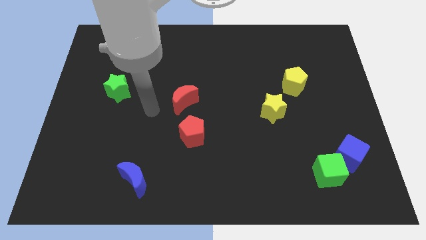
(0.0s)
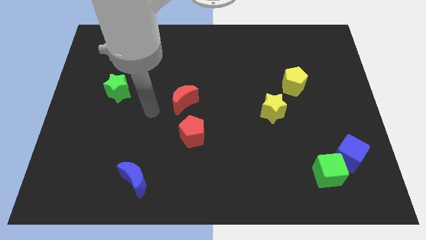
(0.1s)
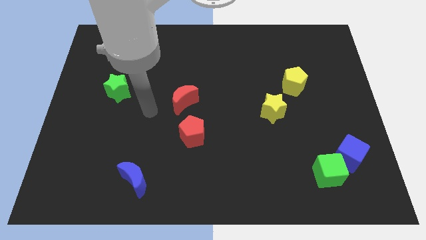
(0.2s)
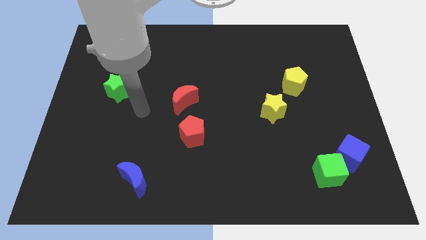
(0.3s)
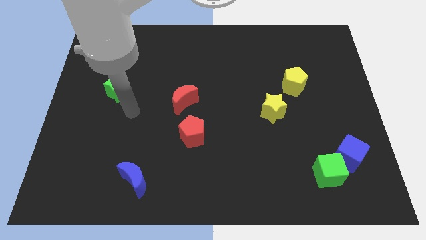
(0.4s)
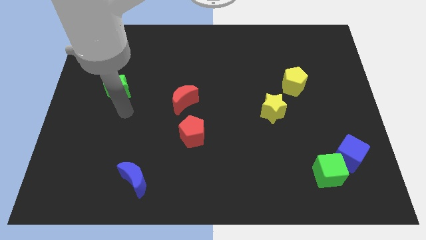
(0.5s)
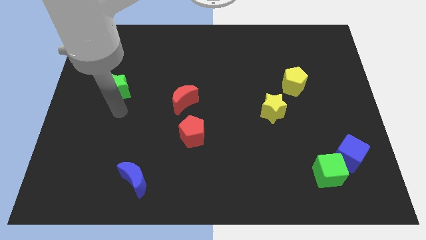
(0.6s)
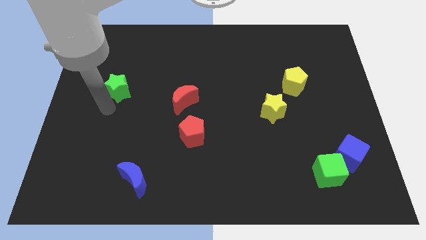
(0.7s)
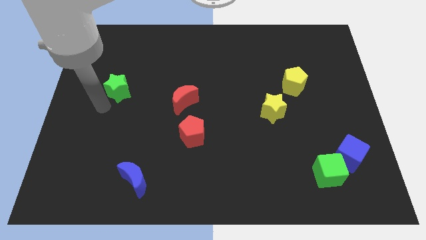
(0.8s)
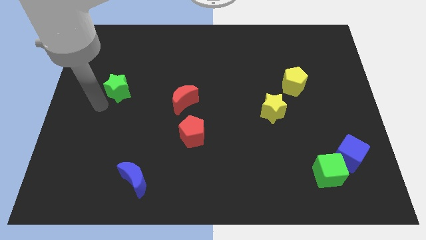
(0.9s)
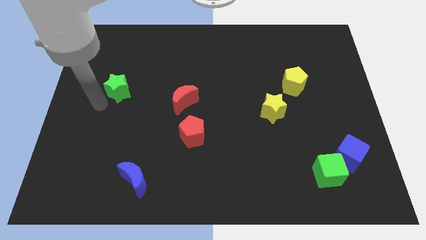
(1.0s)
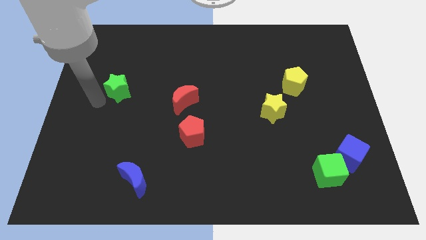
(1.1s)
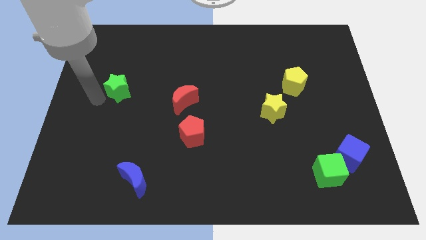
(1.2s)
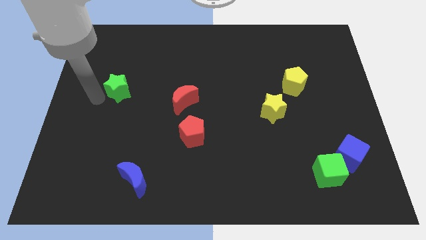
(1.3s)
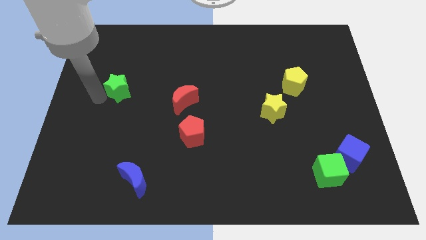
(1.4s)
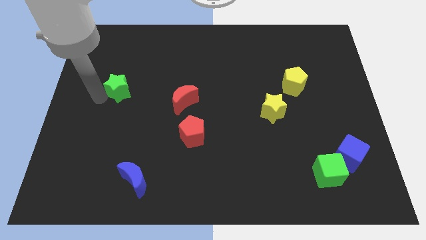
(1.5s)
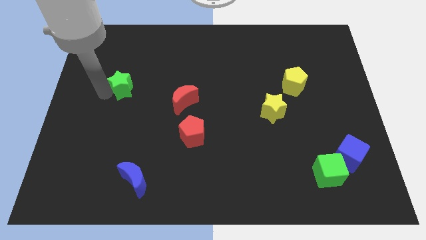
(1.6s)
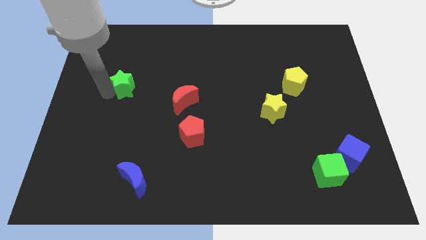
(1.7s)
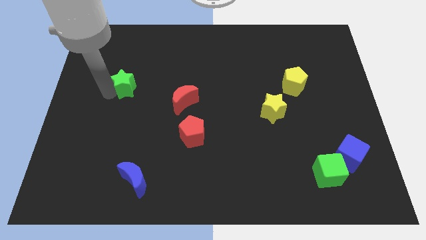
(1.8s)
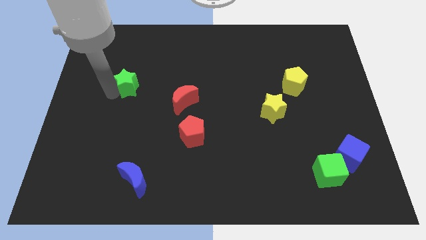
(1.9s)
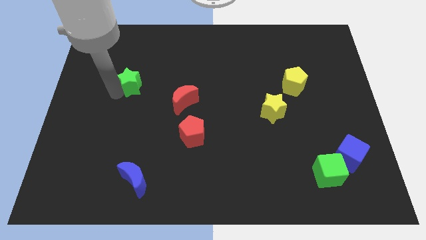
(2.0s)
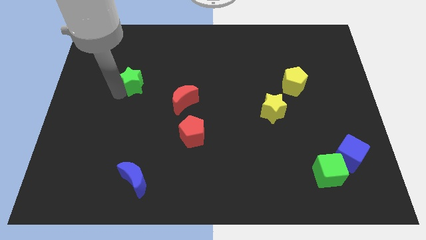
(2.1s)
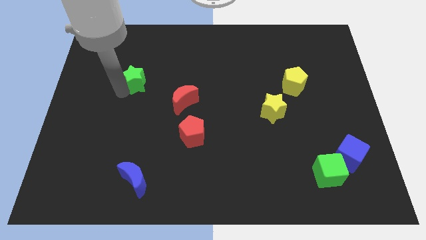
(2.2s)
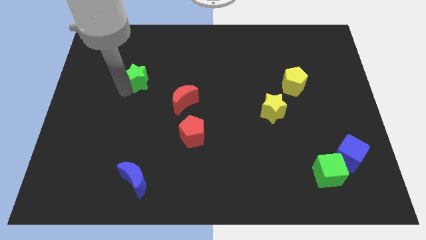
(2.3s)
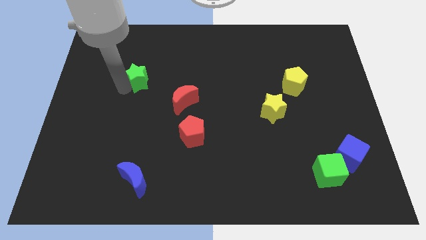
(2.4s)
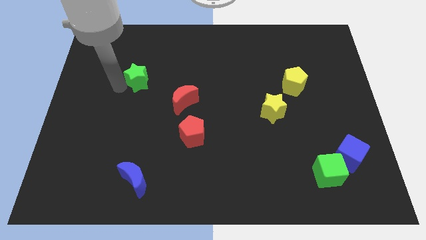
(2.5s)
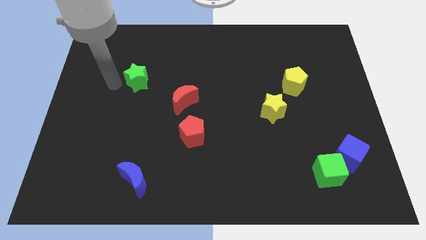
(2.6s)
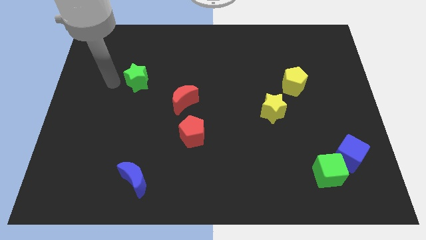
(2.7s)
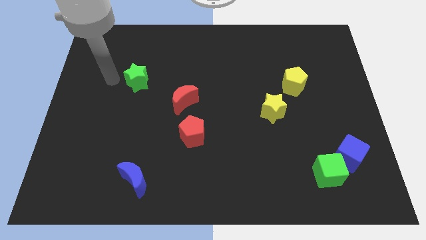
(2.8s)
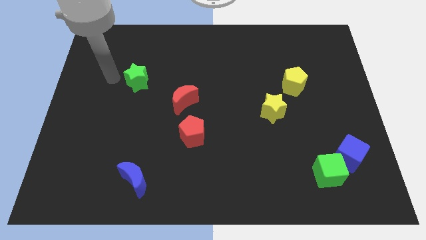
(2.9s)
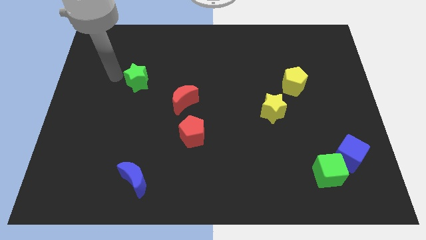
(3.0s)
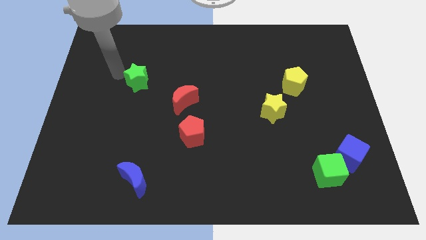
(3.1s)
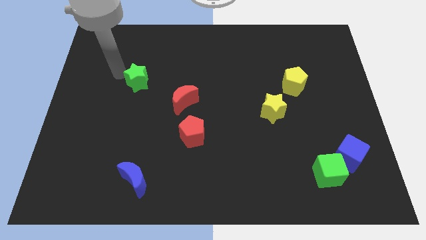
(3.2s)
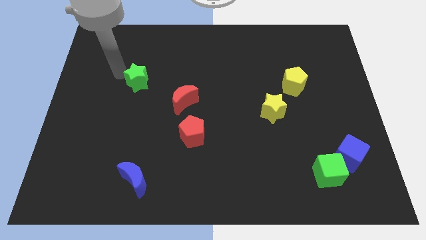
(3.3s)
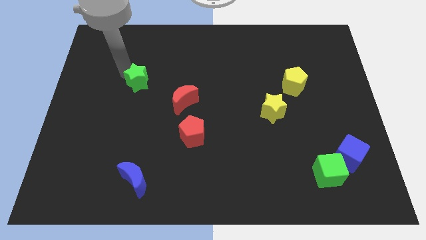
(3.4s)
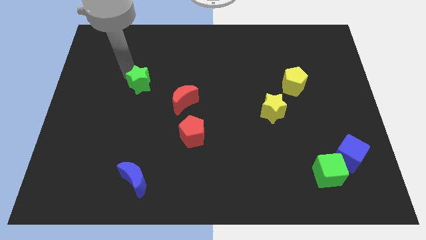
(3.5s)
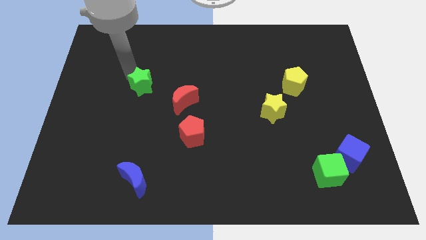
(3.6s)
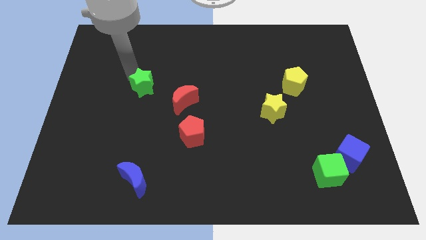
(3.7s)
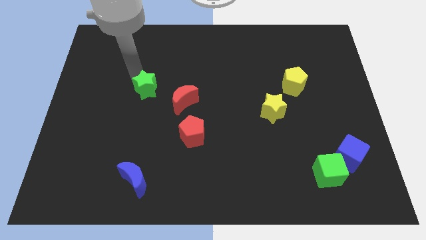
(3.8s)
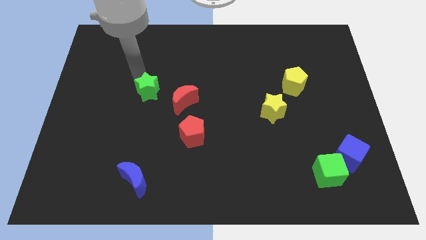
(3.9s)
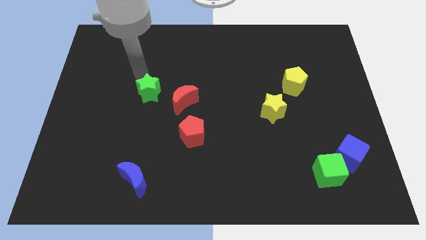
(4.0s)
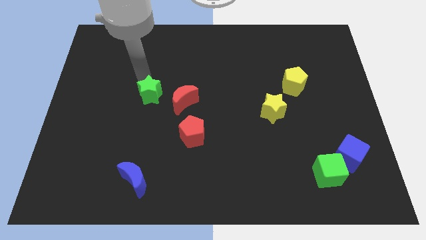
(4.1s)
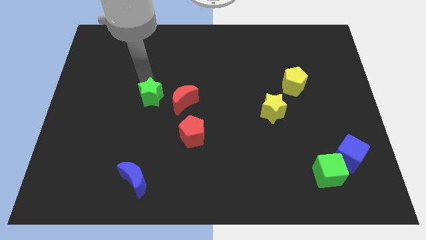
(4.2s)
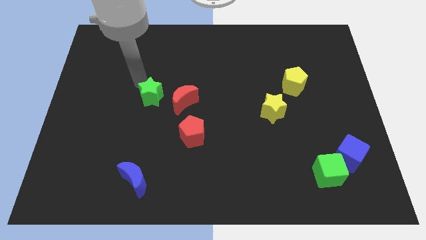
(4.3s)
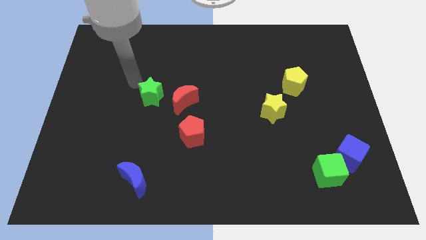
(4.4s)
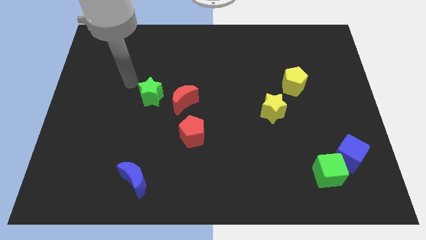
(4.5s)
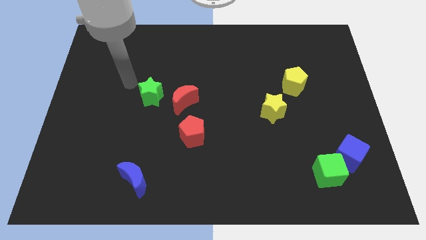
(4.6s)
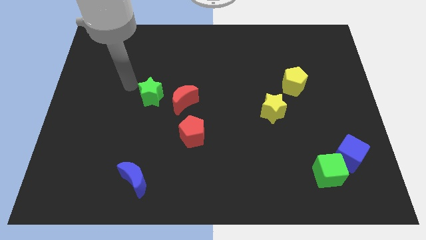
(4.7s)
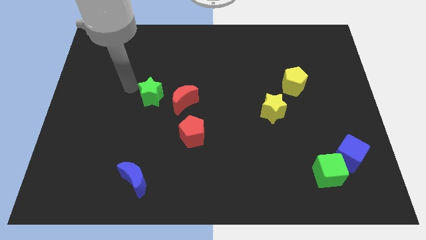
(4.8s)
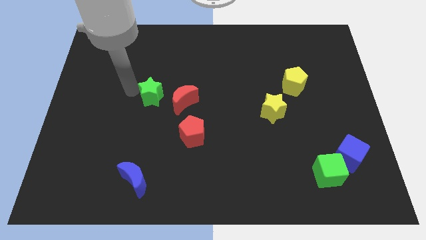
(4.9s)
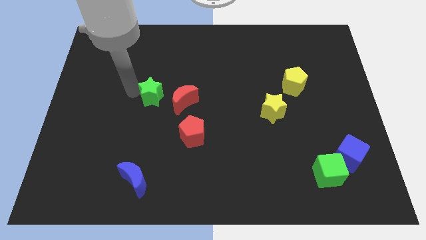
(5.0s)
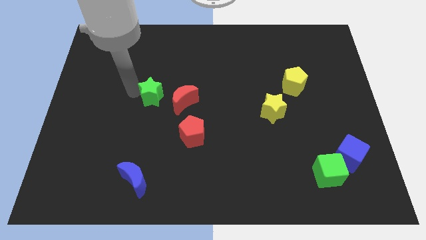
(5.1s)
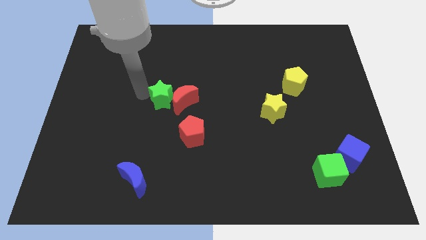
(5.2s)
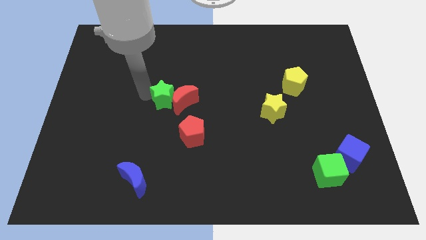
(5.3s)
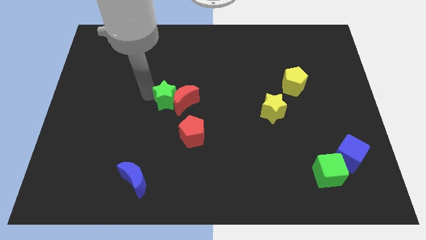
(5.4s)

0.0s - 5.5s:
push the green star next to the red moon

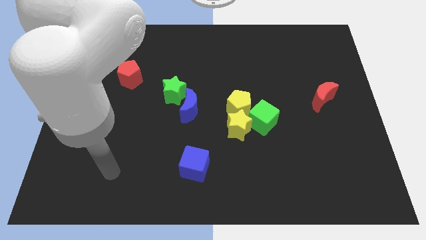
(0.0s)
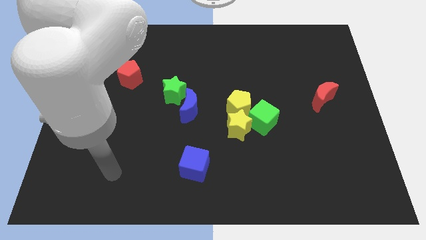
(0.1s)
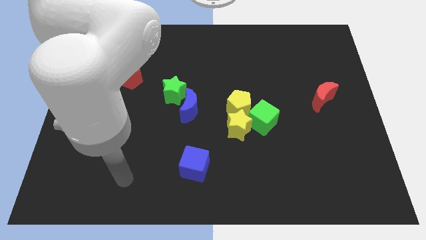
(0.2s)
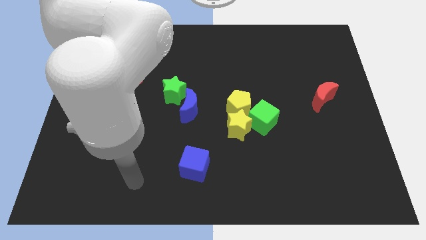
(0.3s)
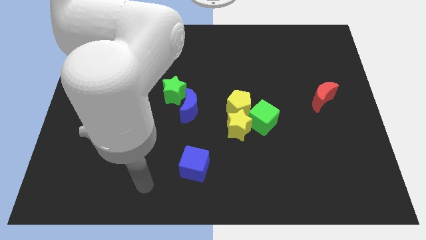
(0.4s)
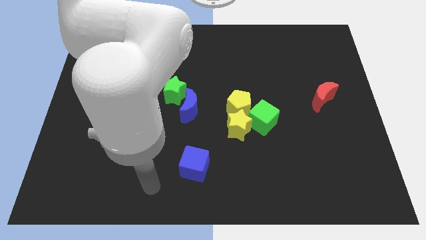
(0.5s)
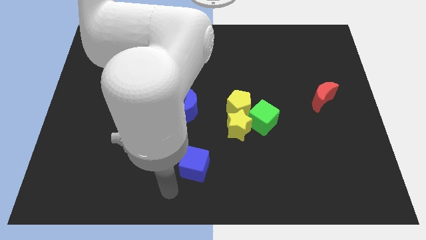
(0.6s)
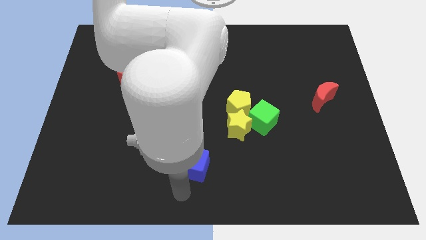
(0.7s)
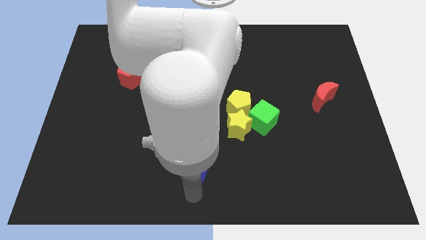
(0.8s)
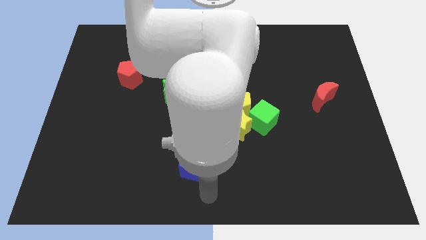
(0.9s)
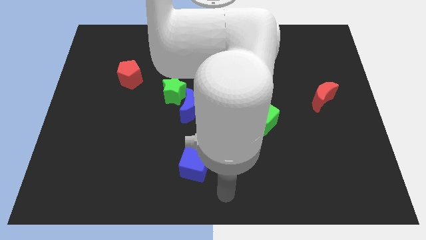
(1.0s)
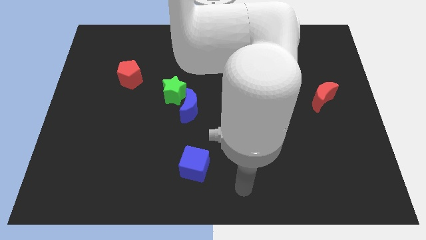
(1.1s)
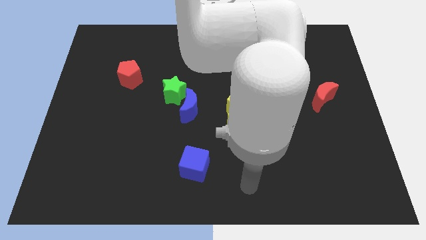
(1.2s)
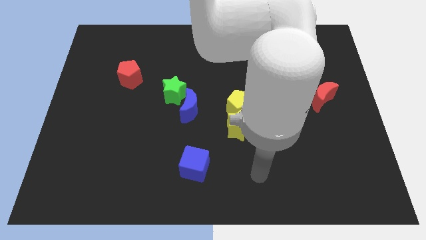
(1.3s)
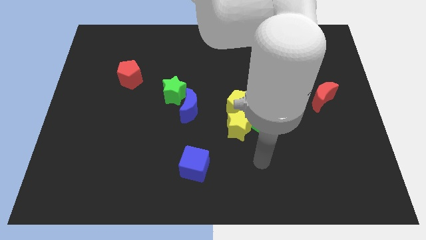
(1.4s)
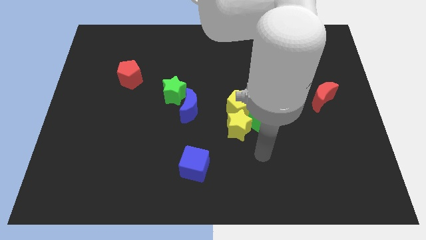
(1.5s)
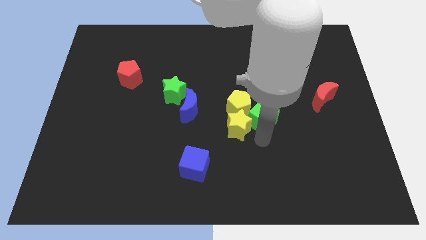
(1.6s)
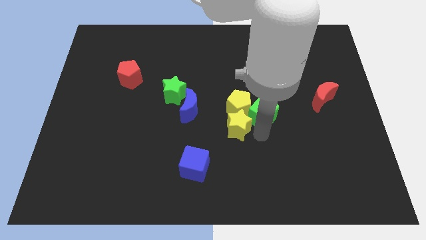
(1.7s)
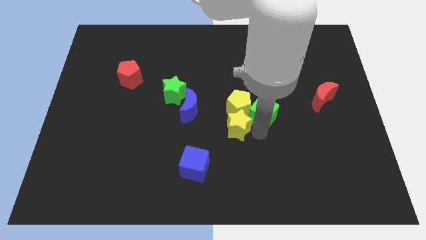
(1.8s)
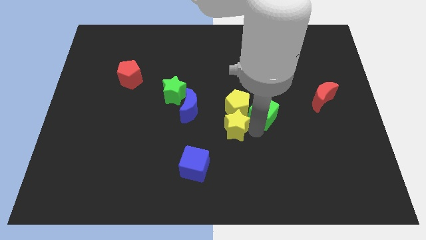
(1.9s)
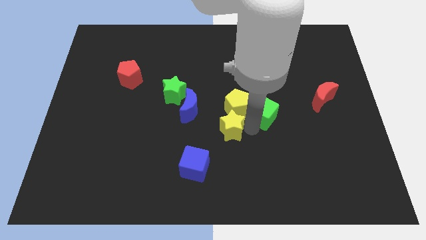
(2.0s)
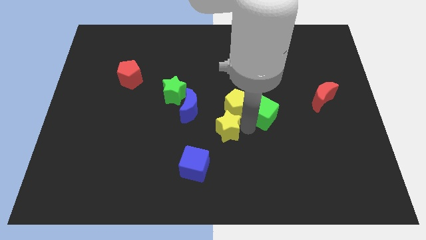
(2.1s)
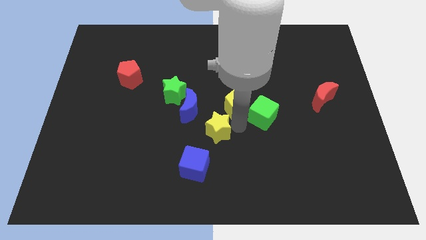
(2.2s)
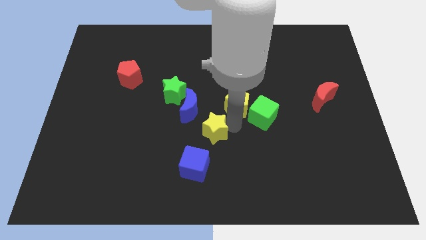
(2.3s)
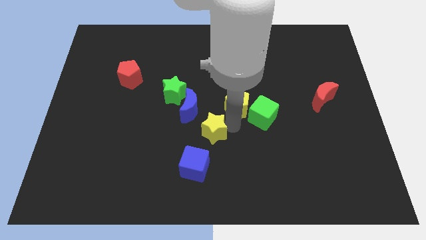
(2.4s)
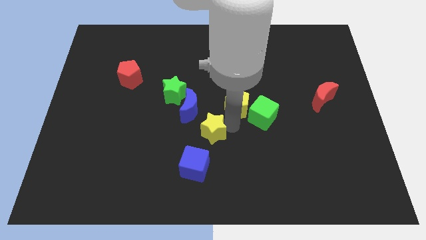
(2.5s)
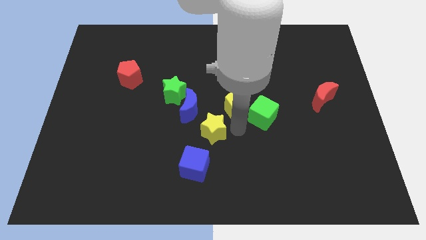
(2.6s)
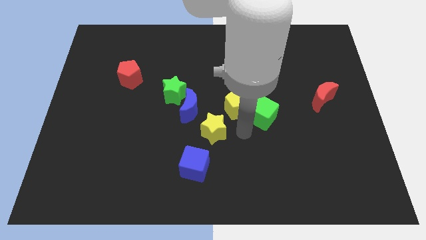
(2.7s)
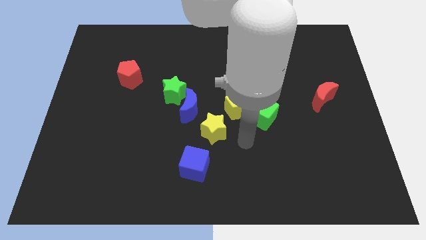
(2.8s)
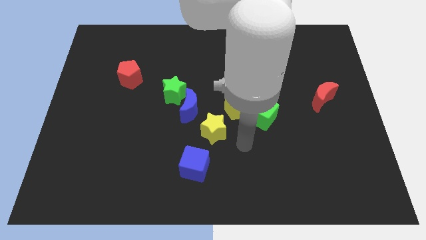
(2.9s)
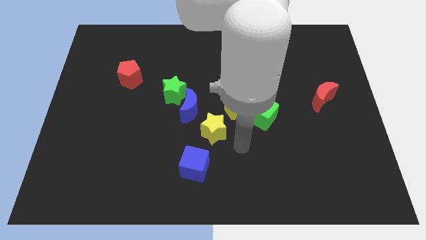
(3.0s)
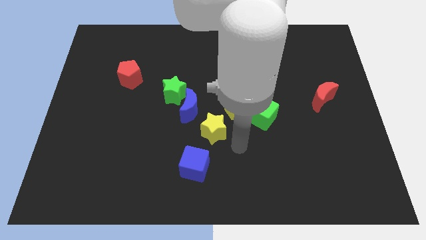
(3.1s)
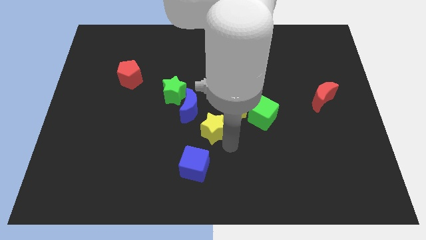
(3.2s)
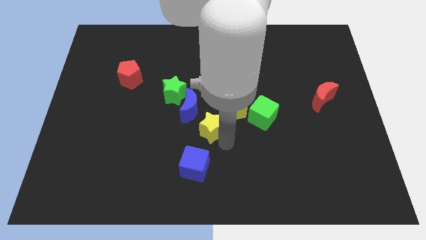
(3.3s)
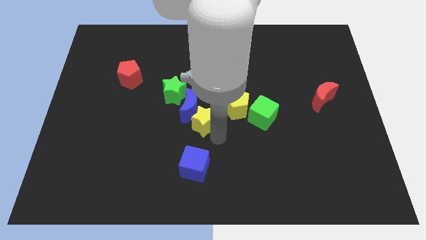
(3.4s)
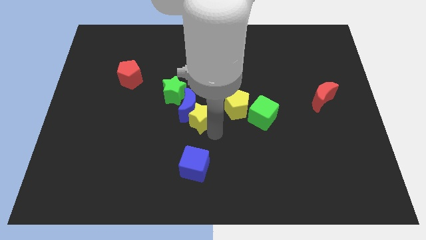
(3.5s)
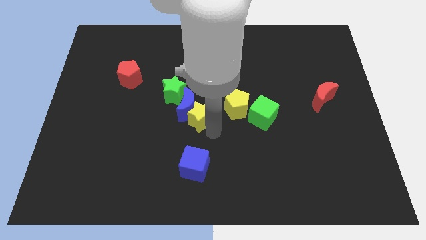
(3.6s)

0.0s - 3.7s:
slide the yellow star to the blue moon
